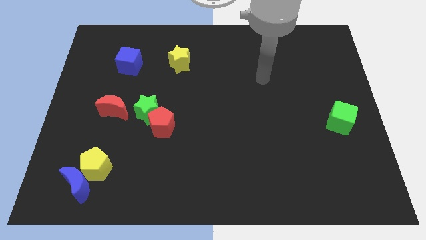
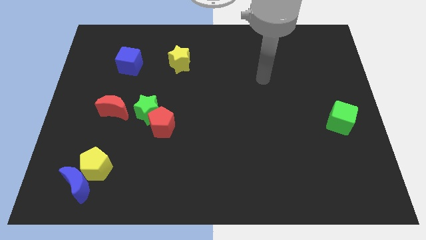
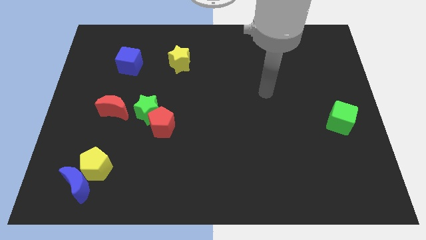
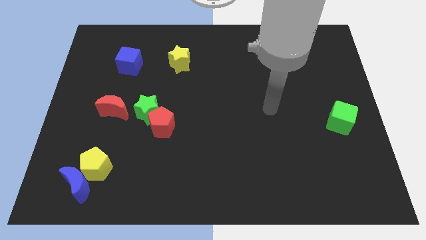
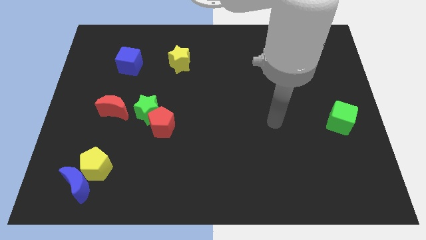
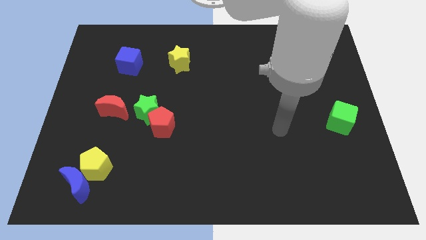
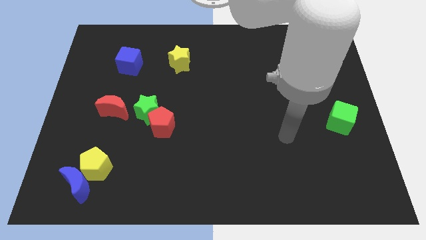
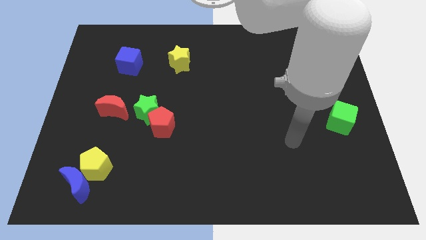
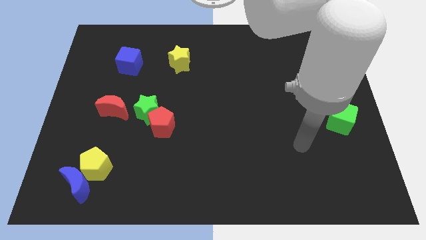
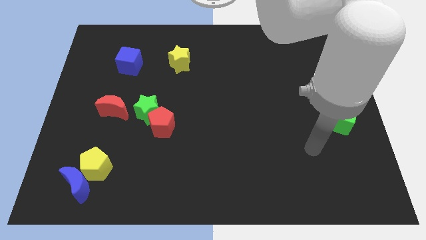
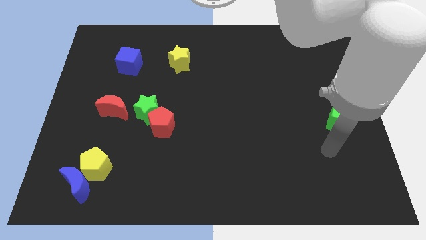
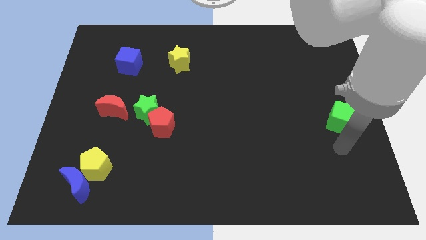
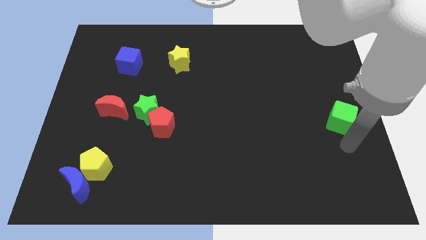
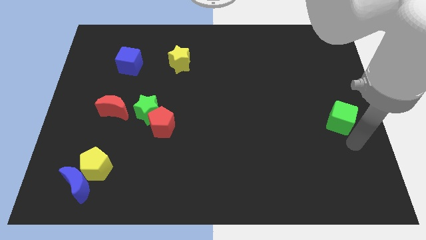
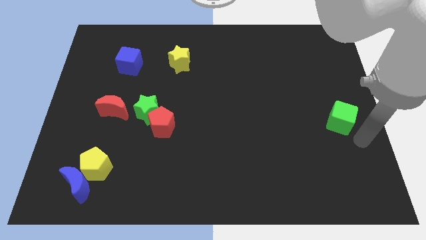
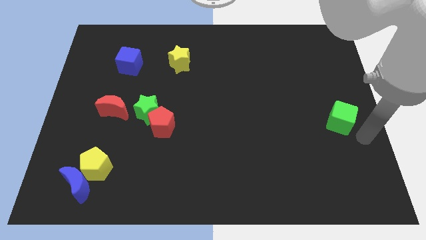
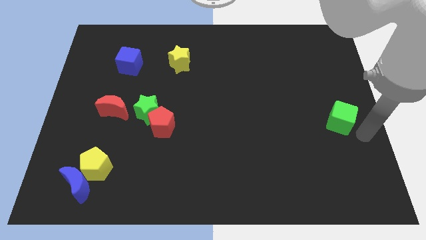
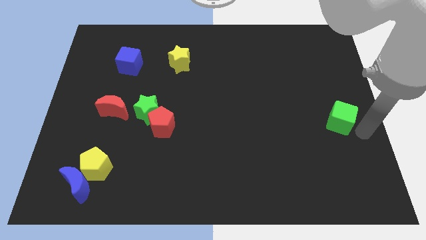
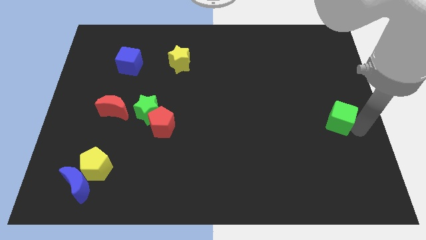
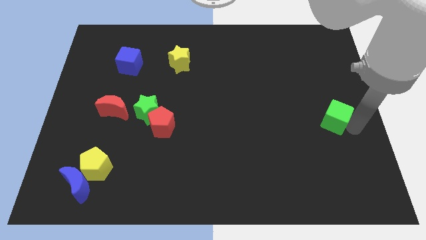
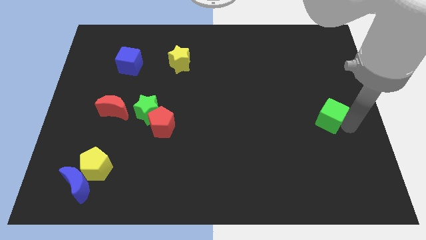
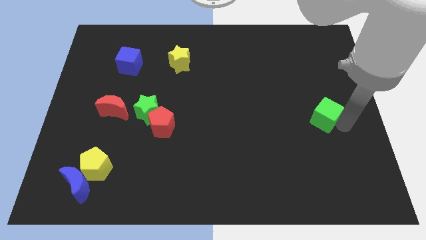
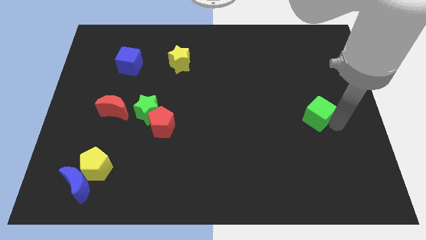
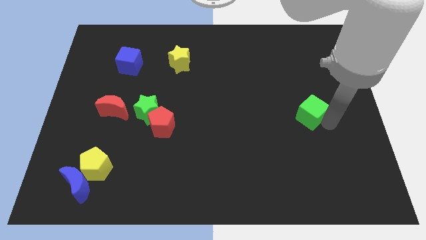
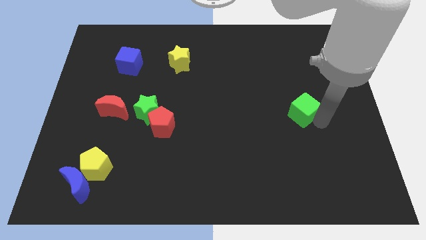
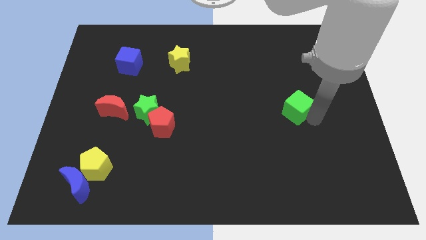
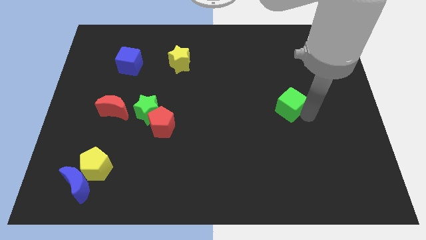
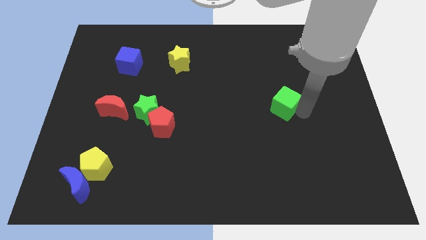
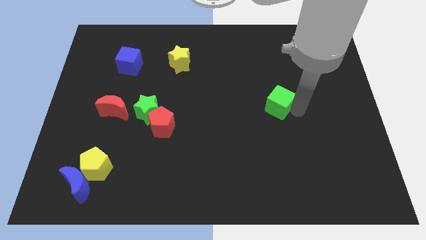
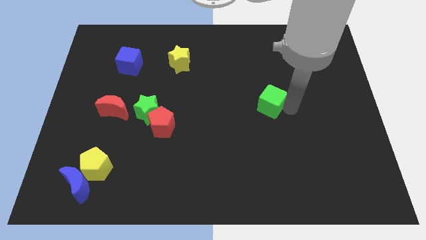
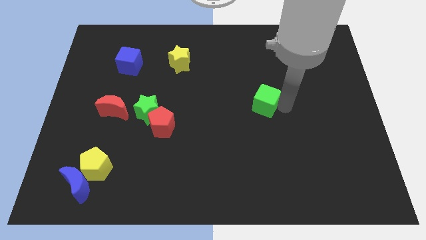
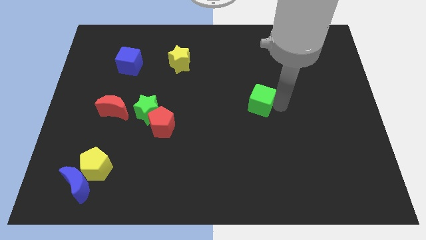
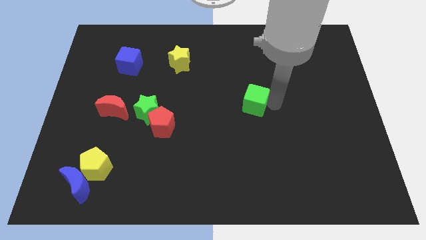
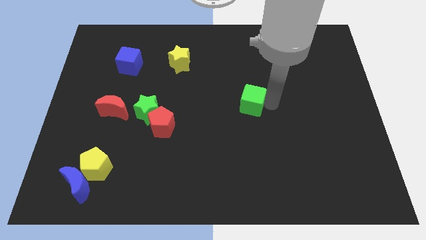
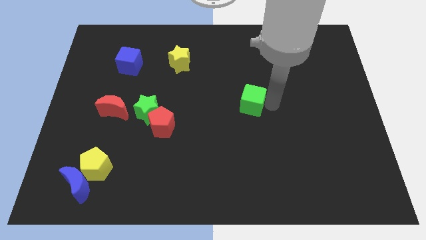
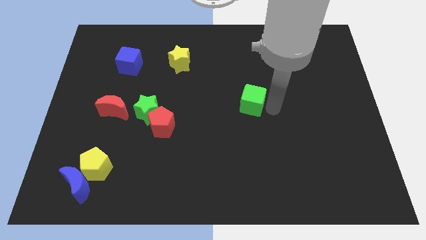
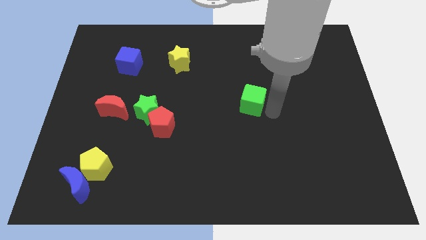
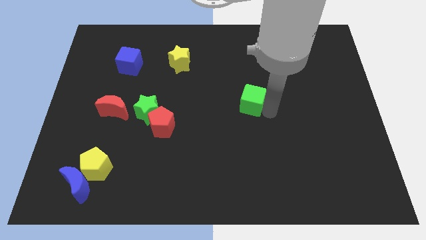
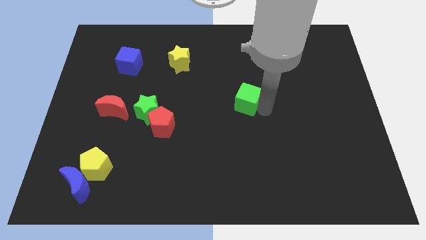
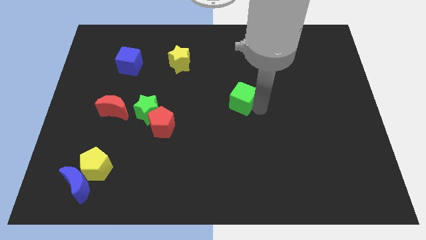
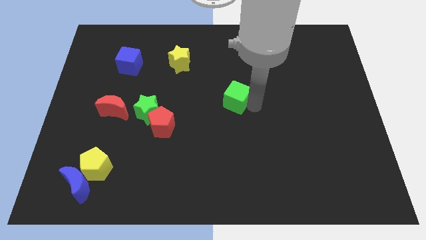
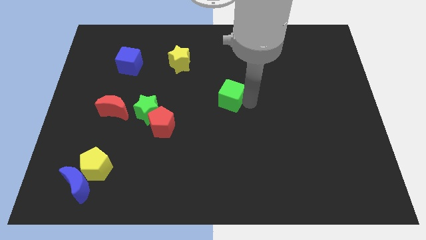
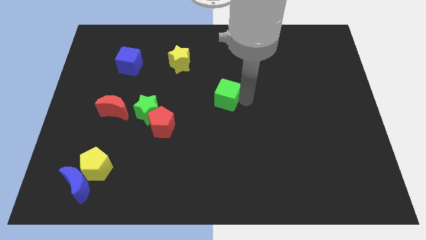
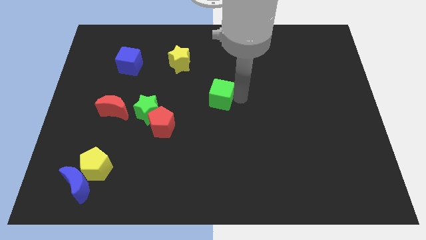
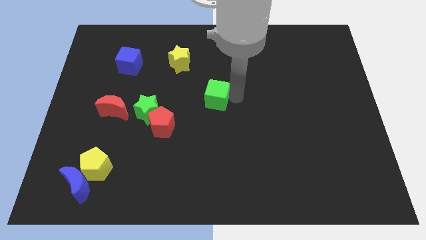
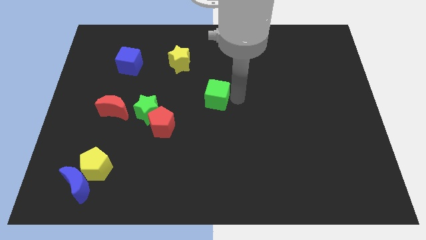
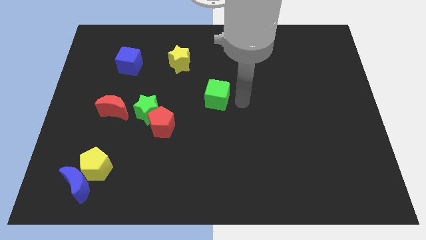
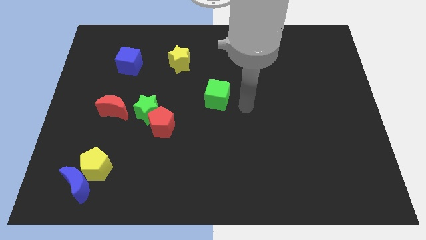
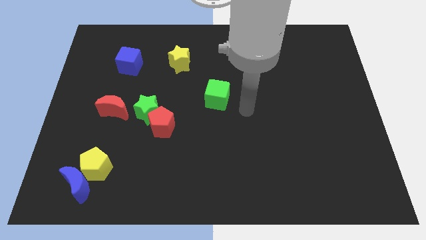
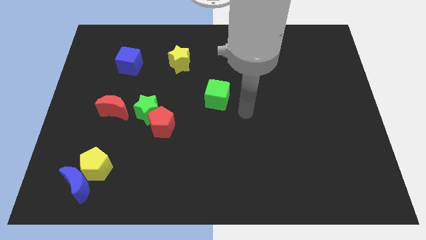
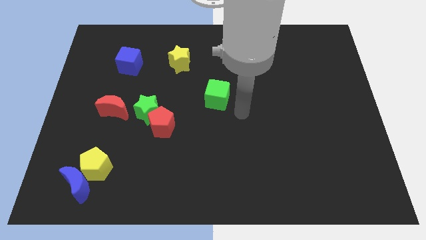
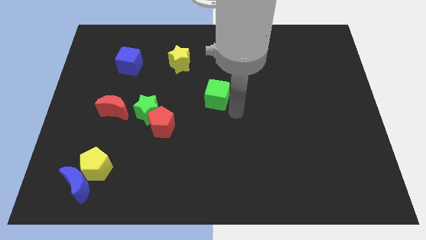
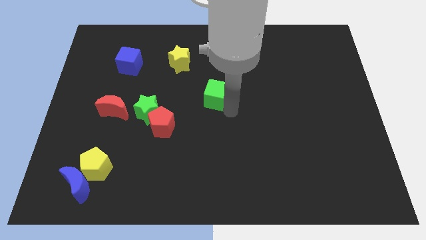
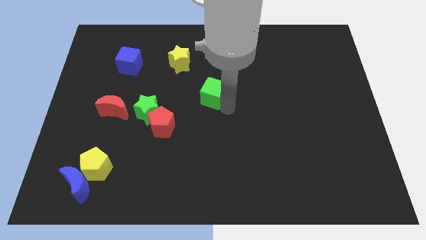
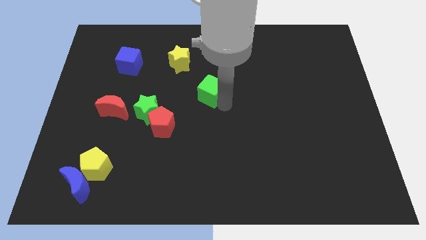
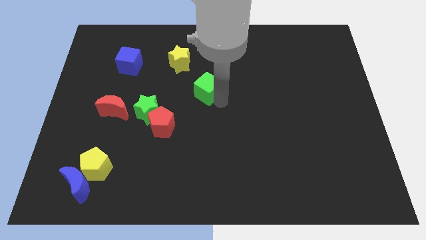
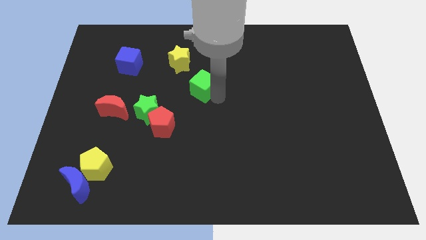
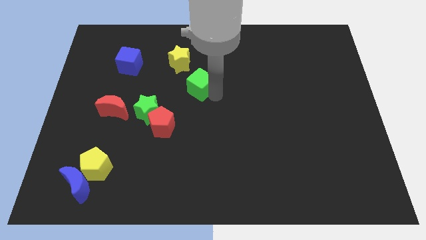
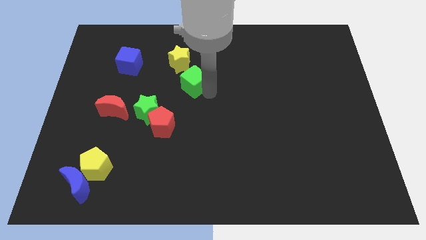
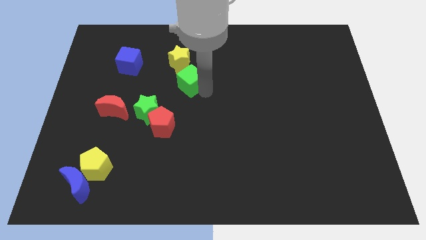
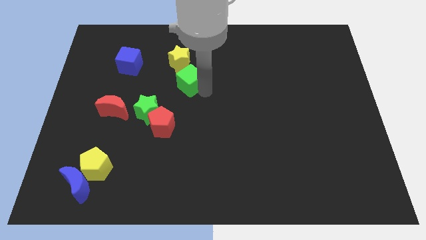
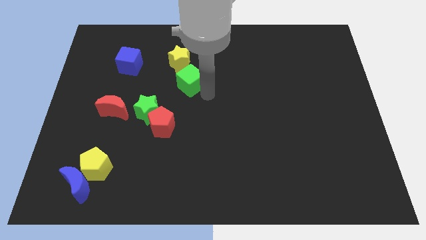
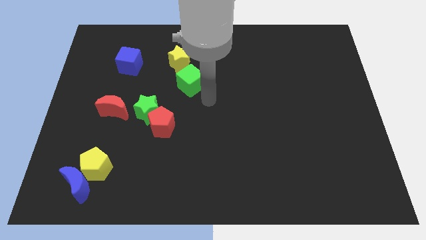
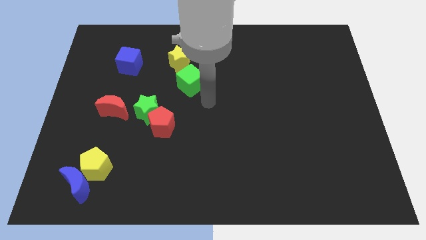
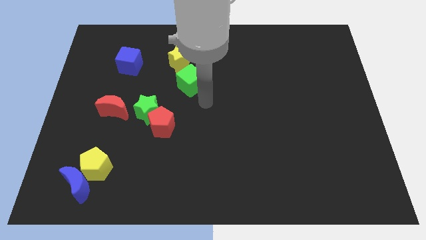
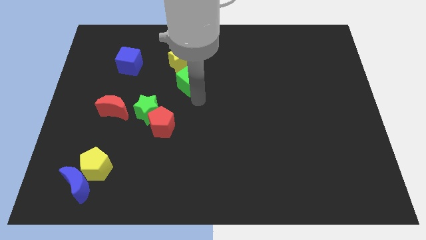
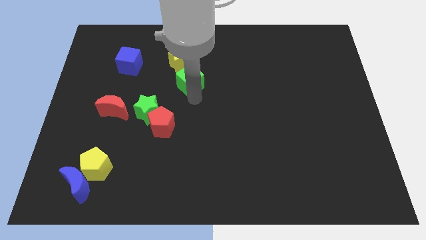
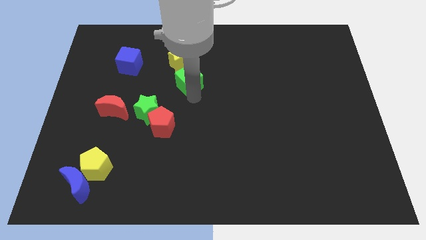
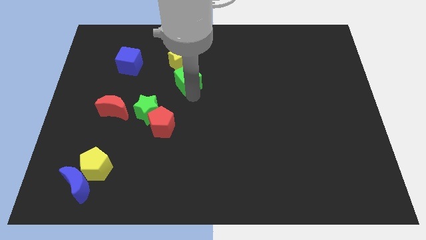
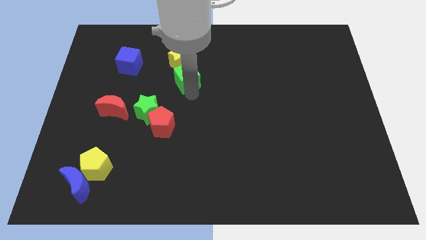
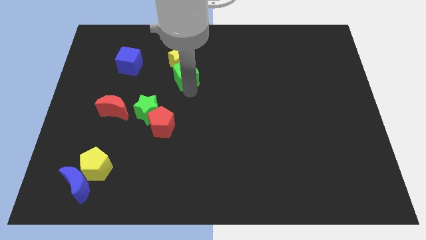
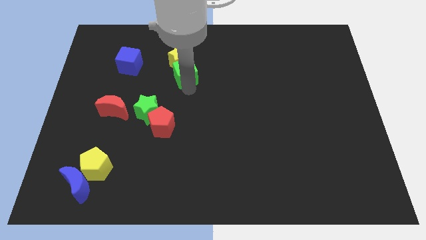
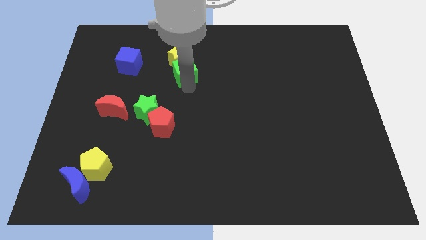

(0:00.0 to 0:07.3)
put the green cube close to the yellow star

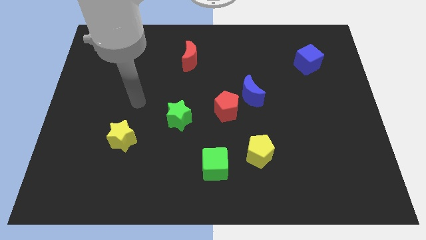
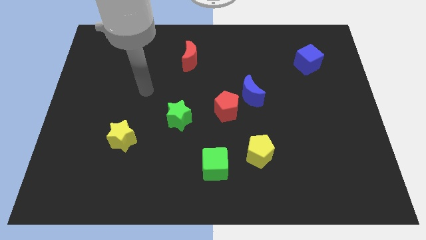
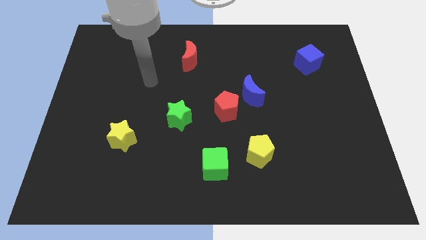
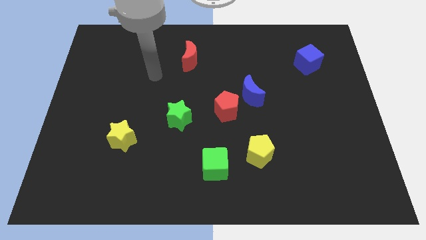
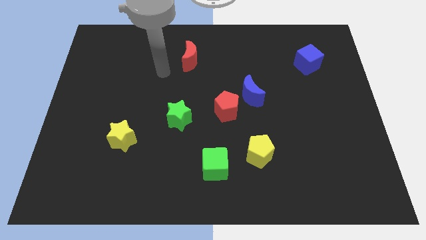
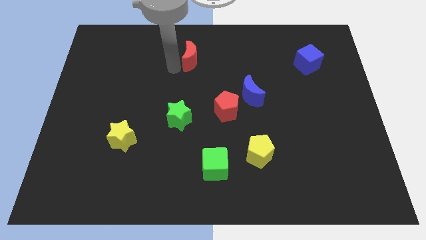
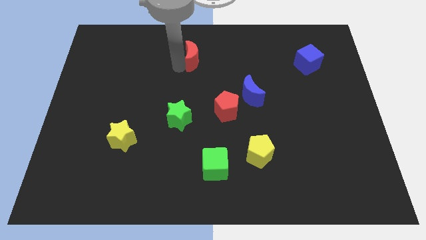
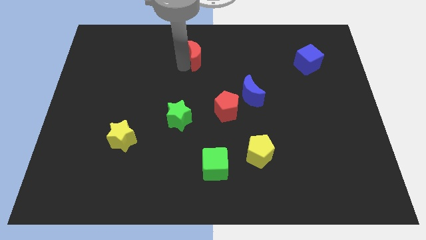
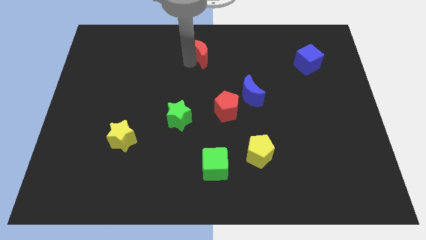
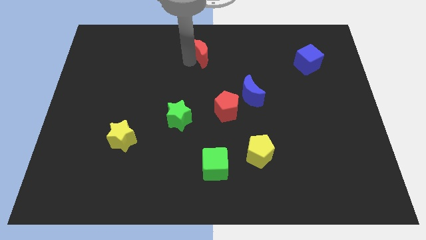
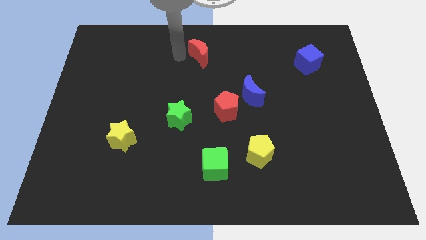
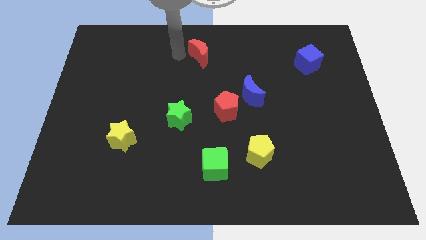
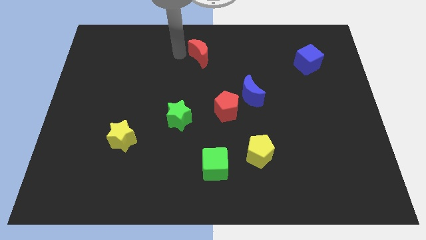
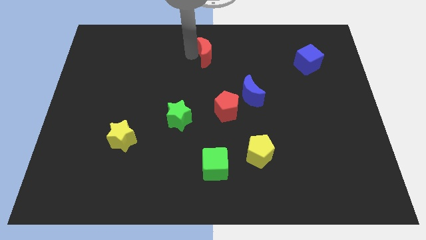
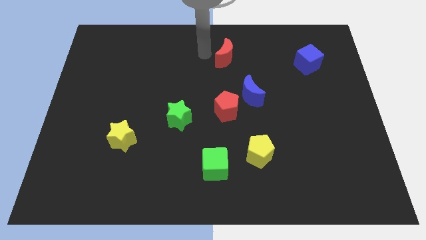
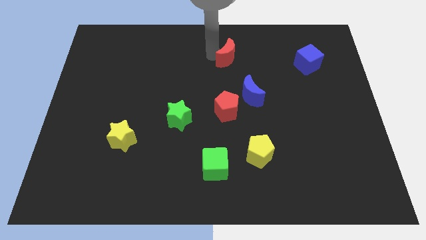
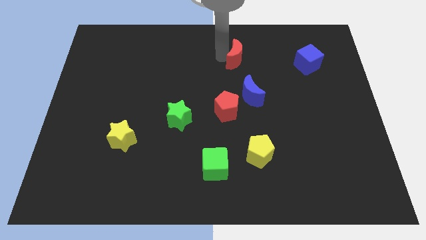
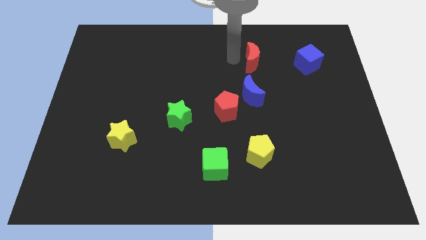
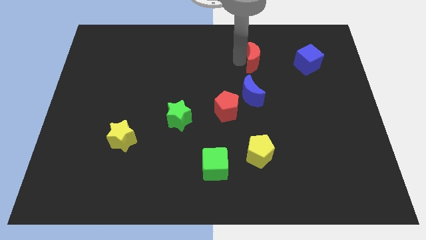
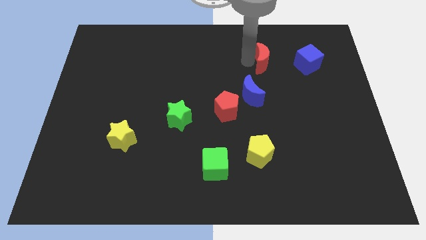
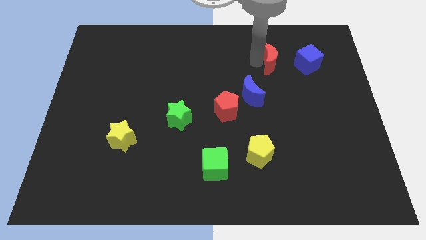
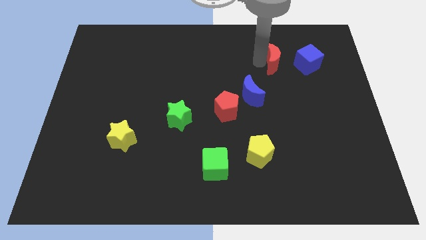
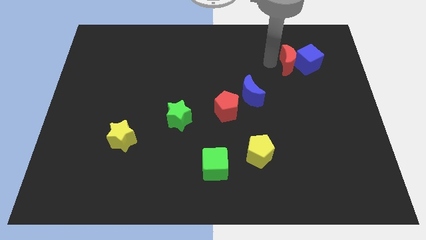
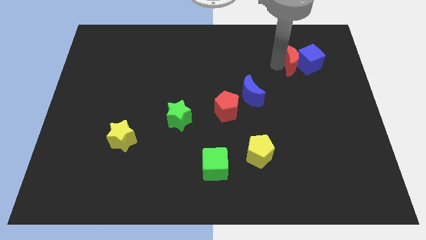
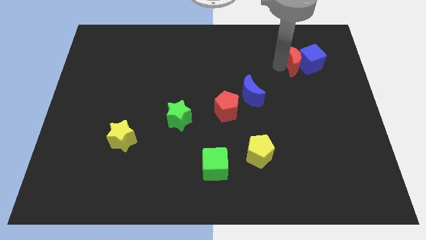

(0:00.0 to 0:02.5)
move the red moon close to the blue cube
